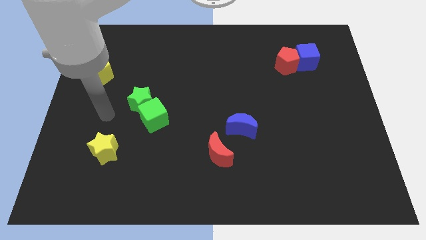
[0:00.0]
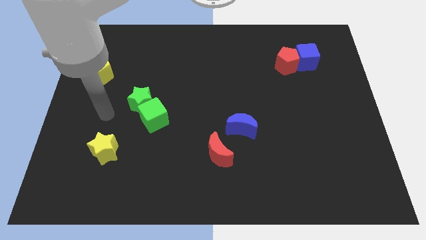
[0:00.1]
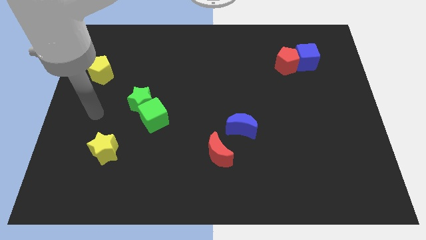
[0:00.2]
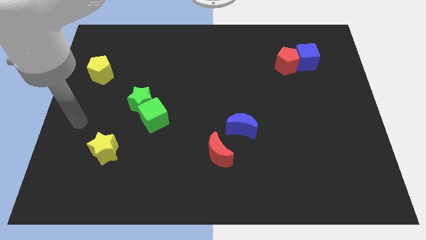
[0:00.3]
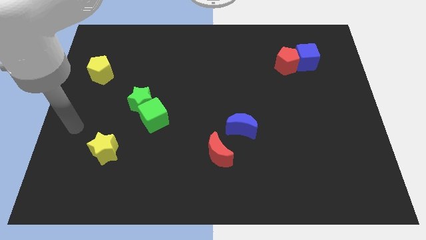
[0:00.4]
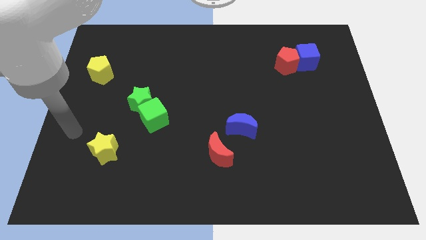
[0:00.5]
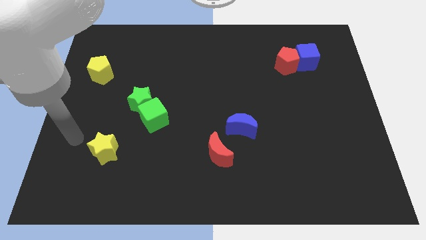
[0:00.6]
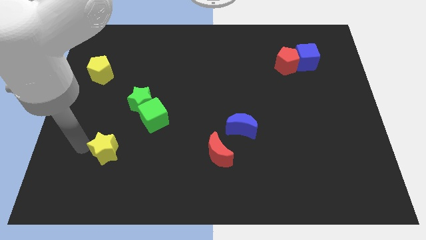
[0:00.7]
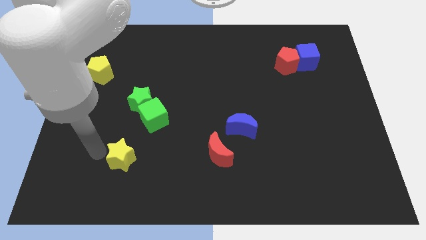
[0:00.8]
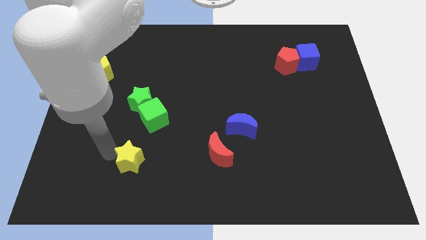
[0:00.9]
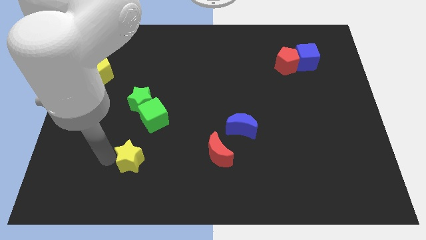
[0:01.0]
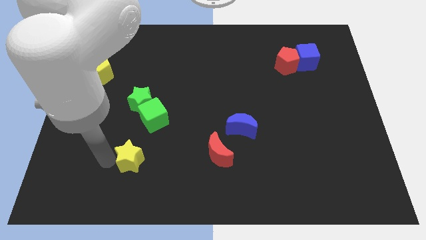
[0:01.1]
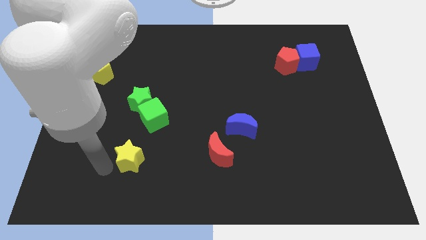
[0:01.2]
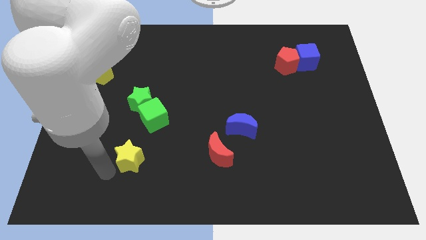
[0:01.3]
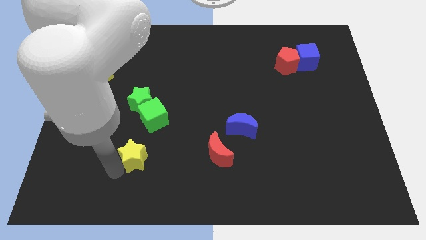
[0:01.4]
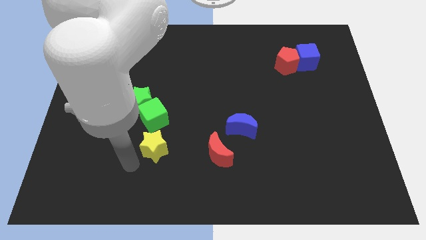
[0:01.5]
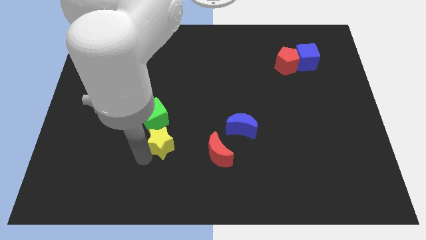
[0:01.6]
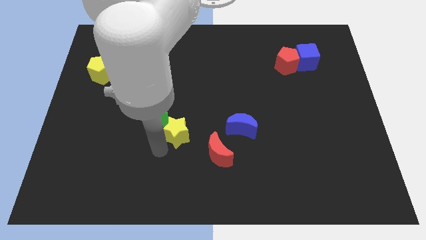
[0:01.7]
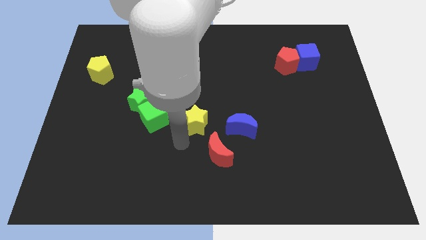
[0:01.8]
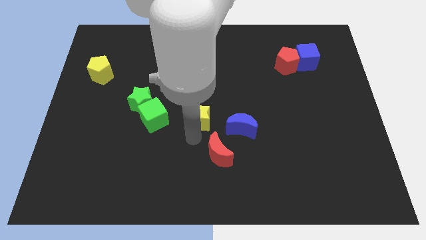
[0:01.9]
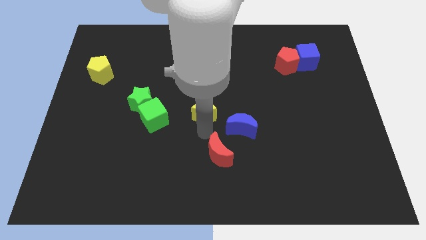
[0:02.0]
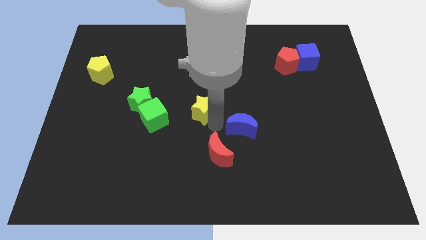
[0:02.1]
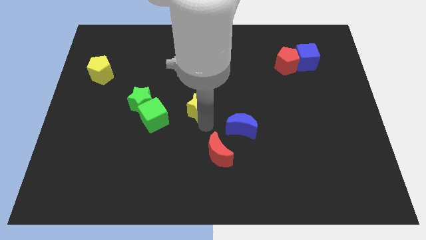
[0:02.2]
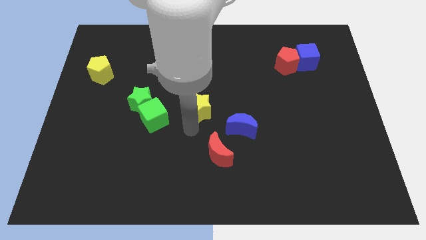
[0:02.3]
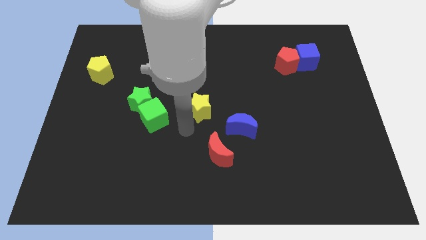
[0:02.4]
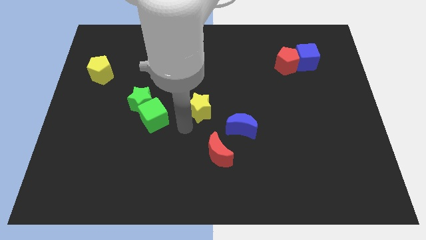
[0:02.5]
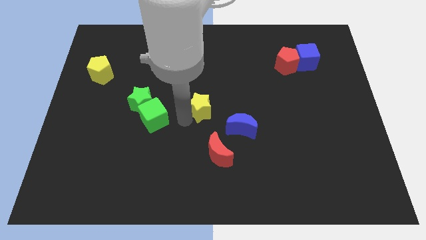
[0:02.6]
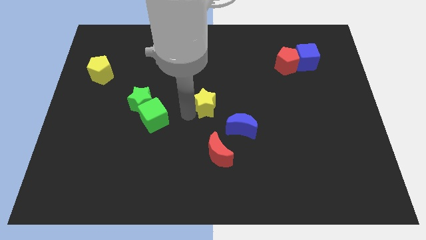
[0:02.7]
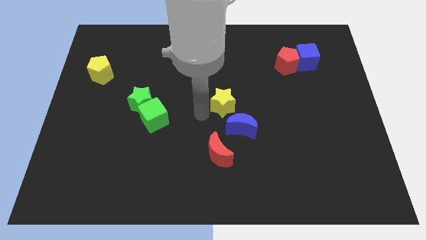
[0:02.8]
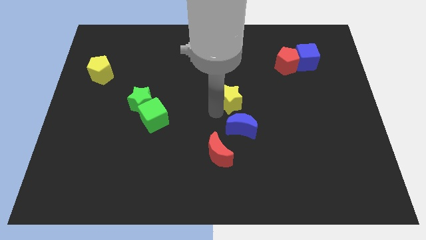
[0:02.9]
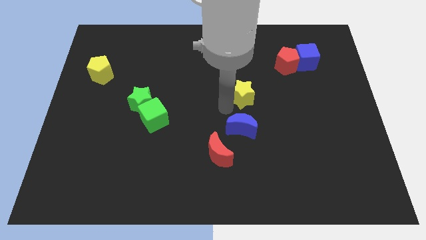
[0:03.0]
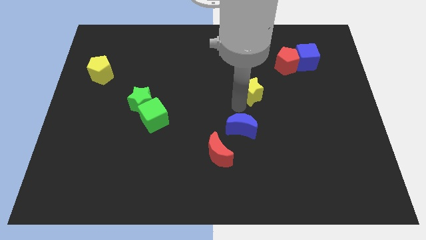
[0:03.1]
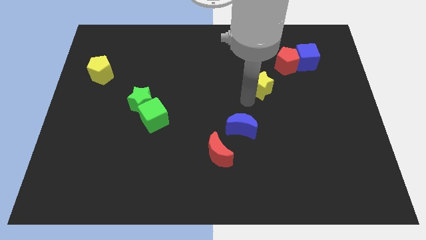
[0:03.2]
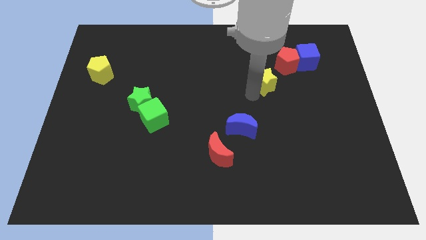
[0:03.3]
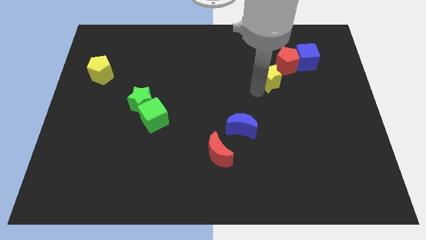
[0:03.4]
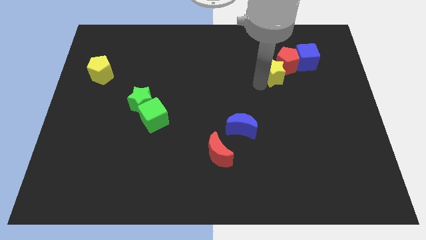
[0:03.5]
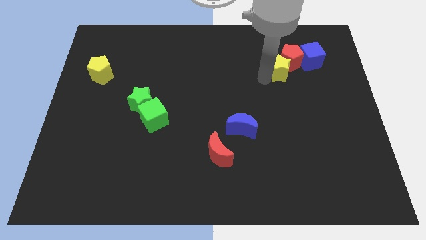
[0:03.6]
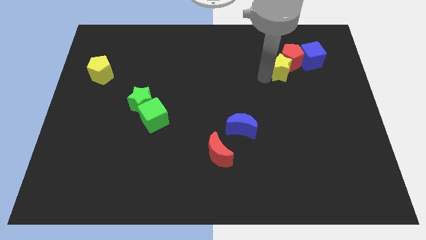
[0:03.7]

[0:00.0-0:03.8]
push the yellow star towards the red pentagon

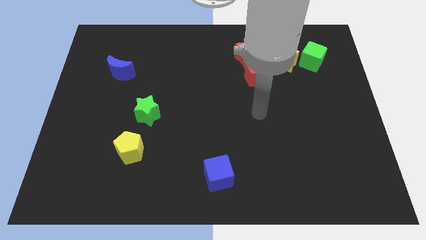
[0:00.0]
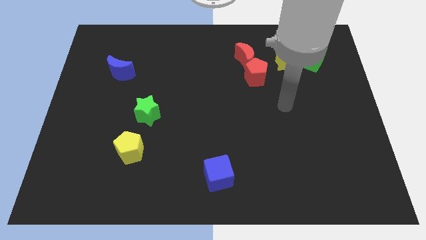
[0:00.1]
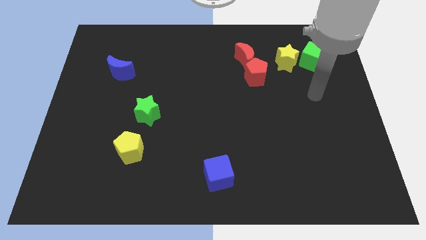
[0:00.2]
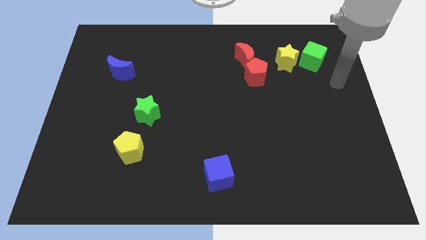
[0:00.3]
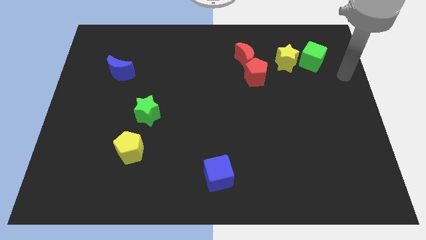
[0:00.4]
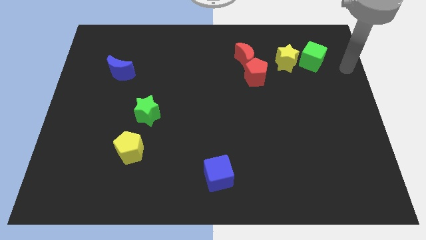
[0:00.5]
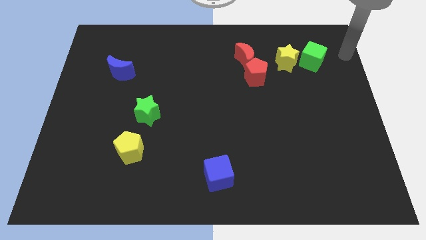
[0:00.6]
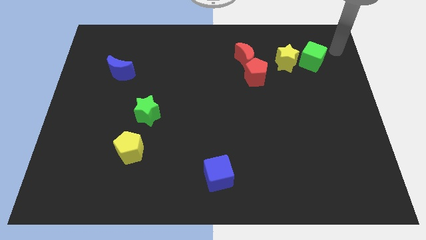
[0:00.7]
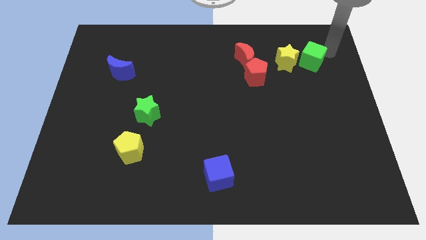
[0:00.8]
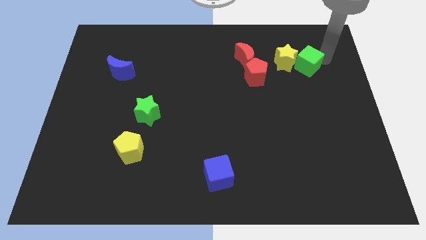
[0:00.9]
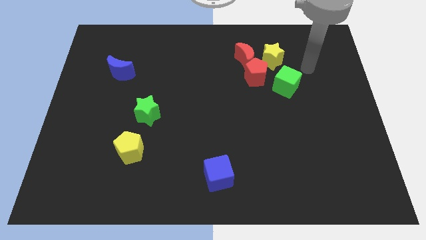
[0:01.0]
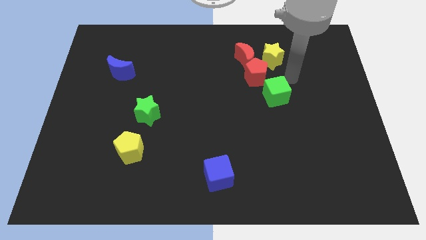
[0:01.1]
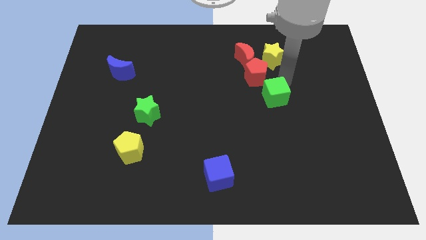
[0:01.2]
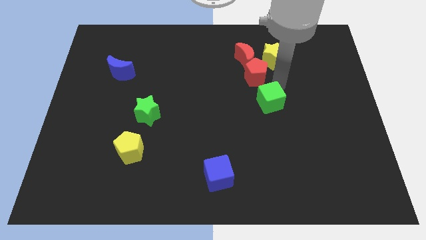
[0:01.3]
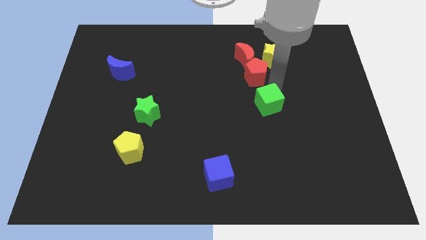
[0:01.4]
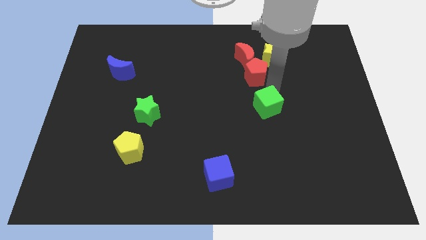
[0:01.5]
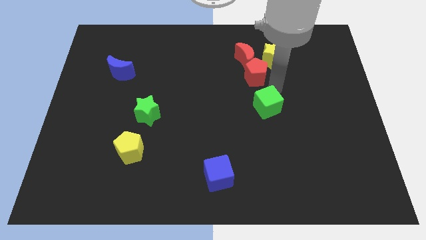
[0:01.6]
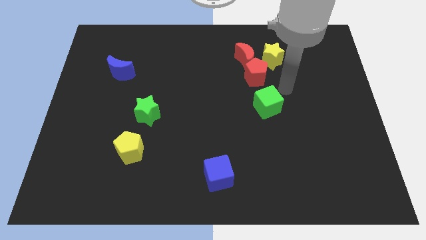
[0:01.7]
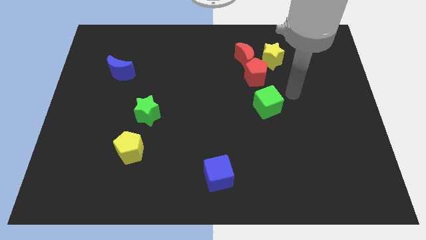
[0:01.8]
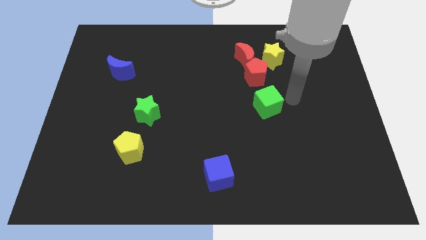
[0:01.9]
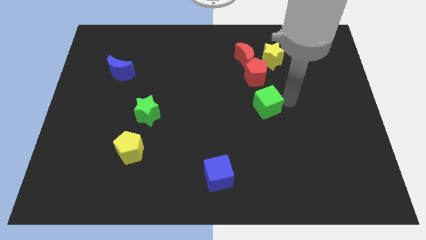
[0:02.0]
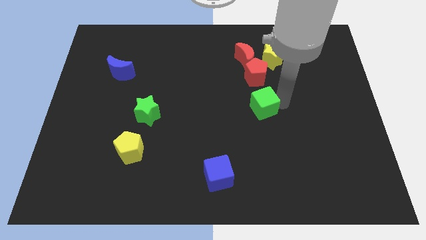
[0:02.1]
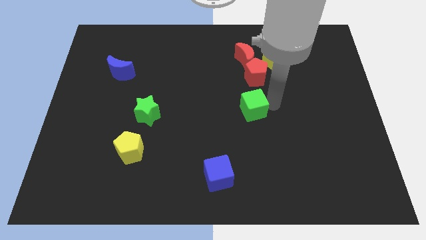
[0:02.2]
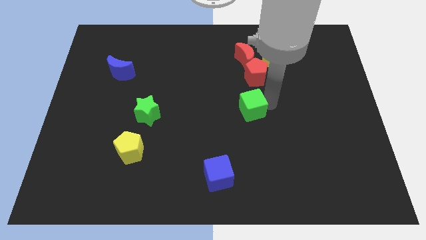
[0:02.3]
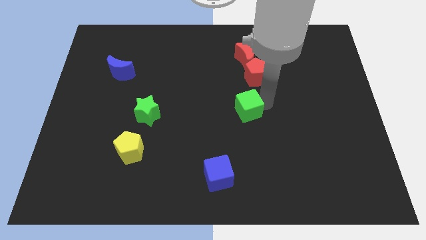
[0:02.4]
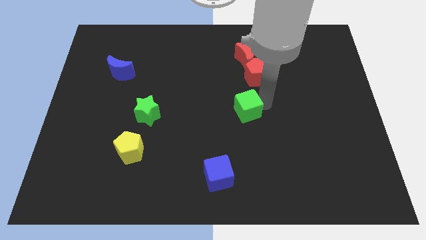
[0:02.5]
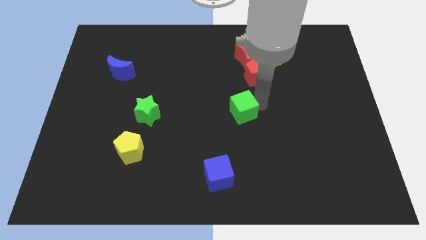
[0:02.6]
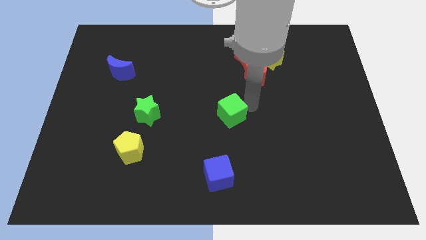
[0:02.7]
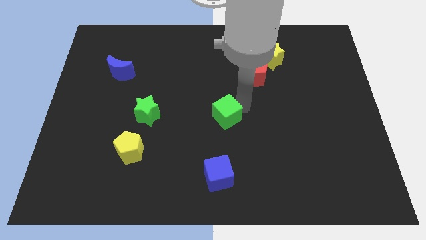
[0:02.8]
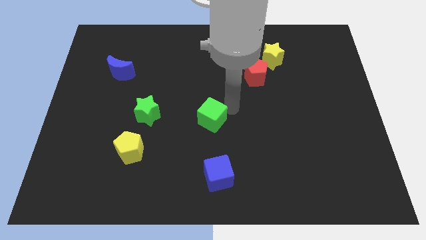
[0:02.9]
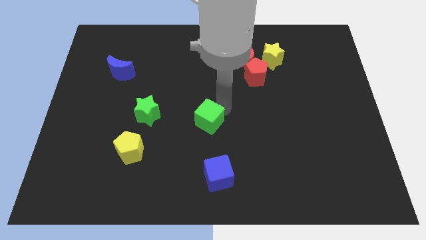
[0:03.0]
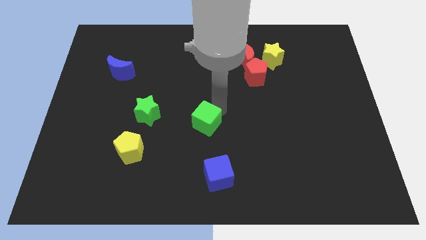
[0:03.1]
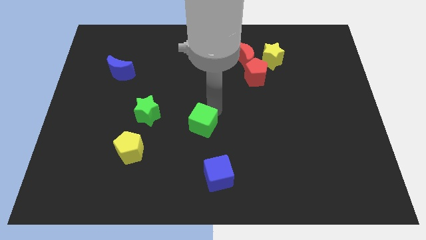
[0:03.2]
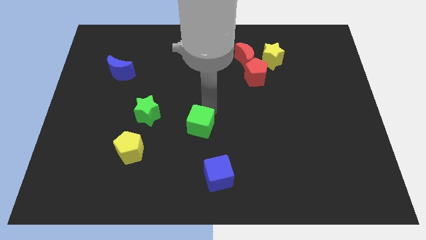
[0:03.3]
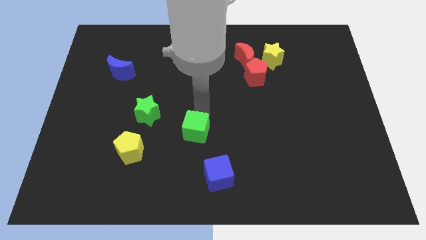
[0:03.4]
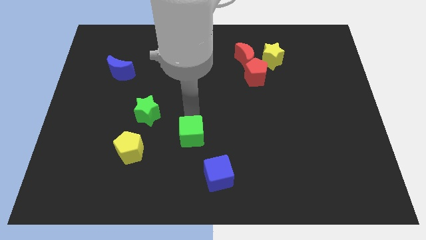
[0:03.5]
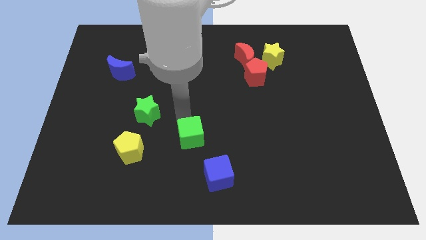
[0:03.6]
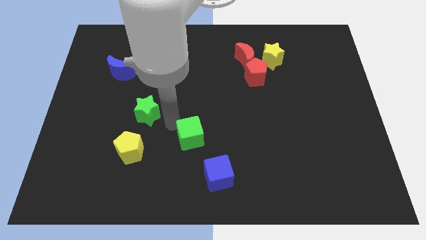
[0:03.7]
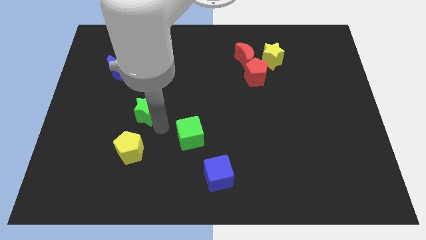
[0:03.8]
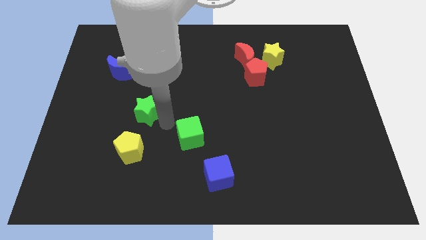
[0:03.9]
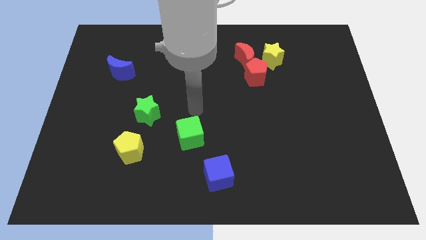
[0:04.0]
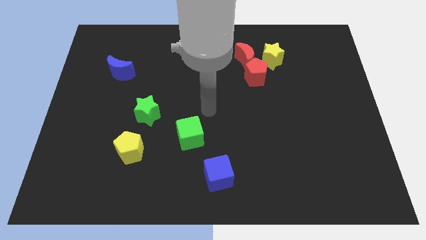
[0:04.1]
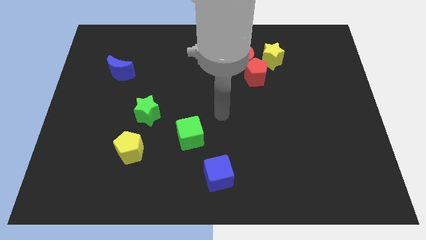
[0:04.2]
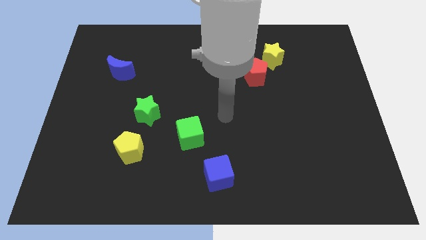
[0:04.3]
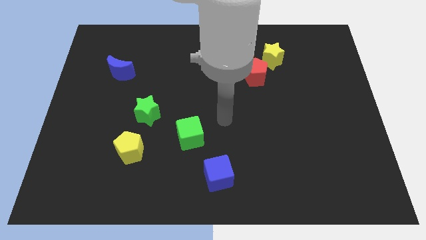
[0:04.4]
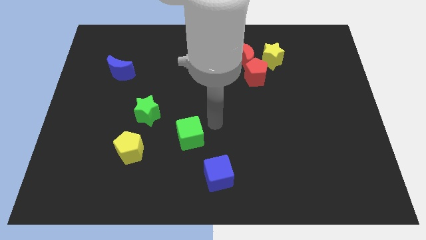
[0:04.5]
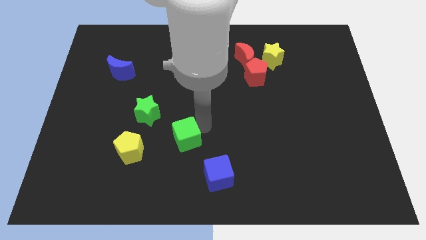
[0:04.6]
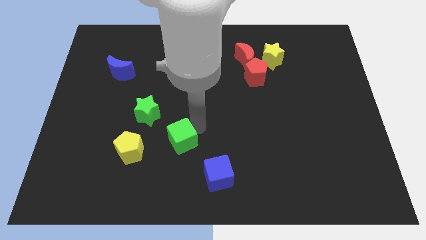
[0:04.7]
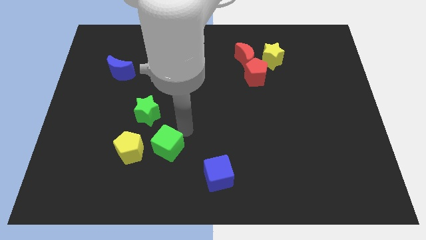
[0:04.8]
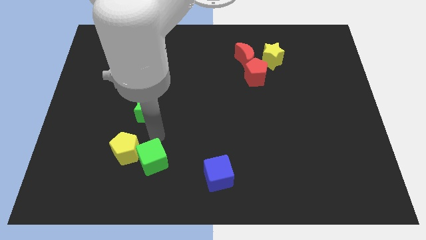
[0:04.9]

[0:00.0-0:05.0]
slide the green cube to the yellow pentagon
